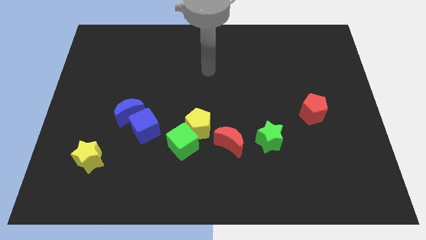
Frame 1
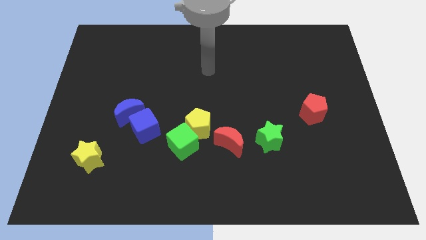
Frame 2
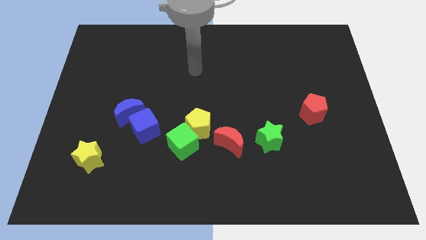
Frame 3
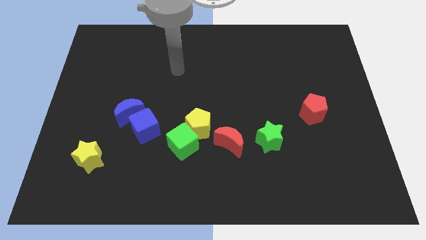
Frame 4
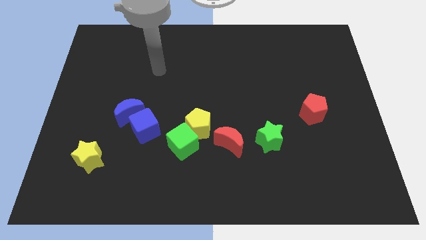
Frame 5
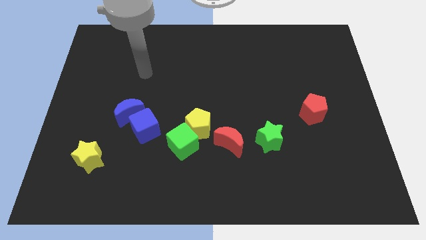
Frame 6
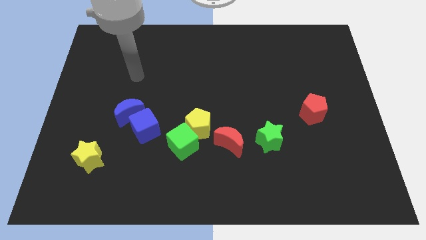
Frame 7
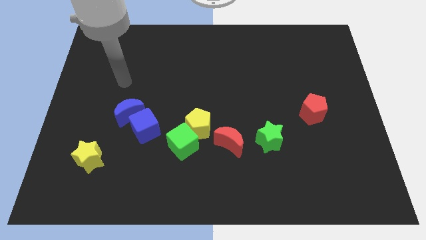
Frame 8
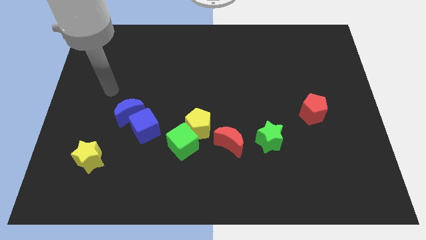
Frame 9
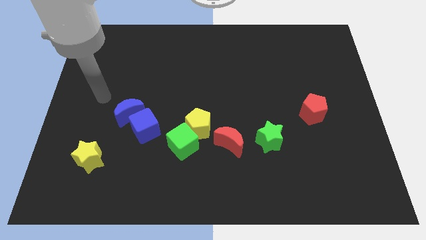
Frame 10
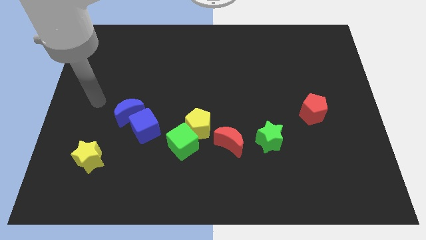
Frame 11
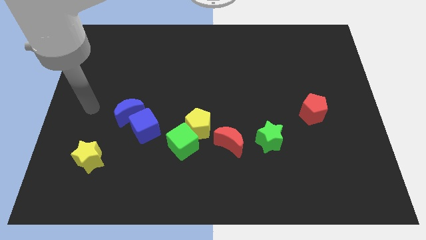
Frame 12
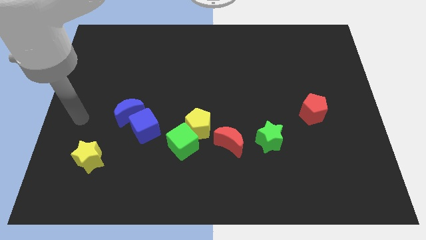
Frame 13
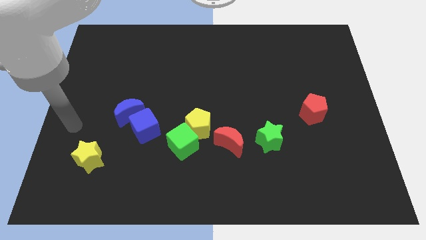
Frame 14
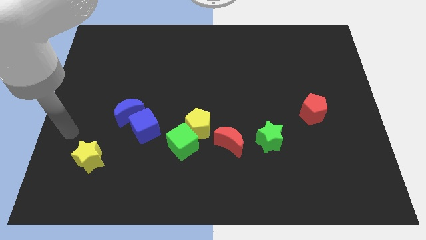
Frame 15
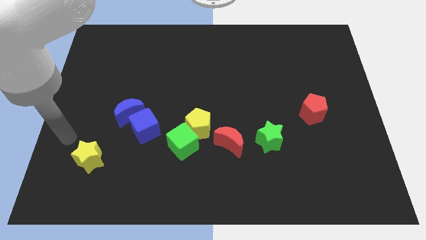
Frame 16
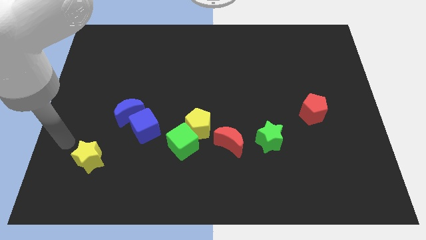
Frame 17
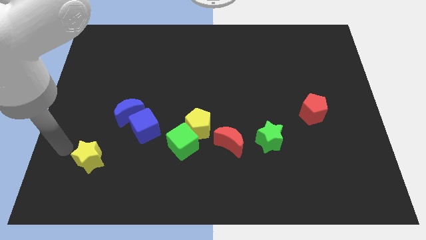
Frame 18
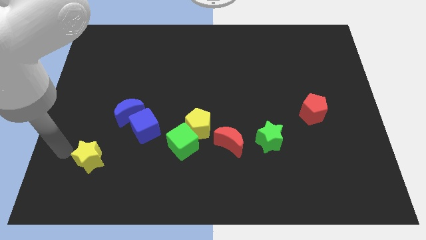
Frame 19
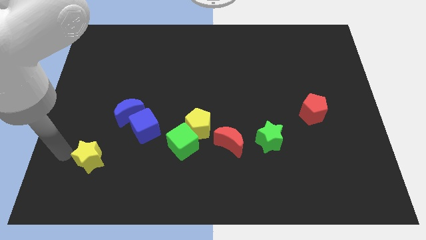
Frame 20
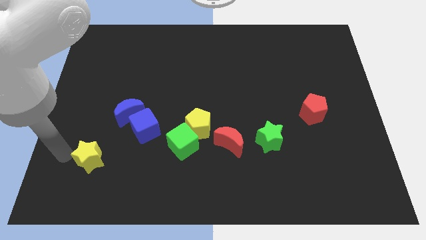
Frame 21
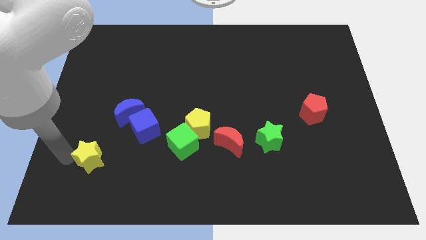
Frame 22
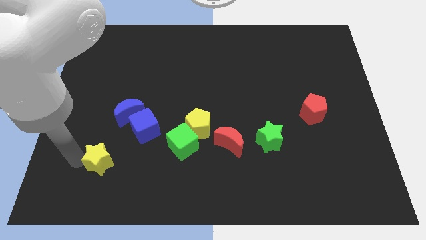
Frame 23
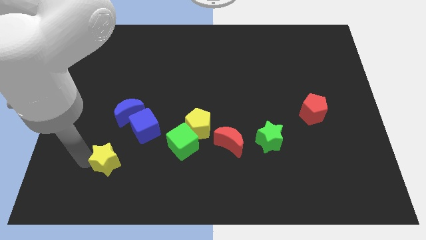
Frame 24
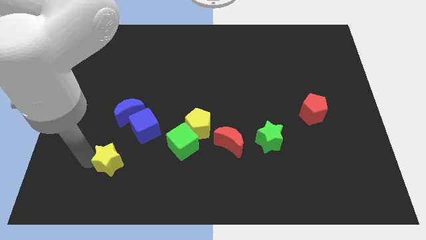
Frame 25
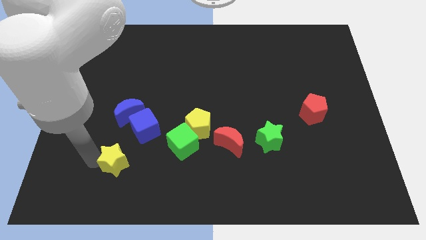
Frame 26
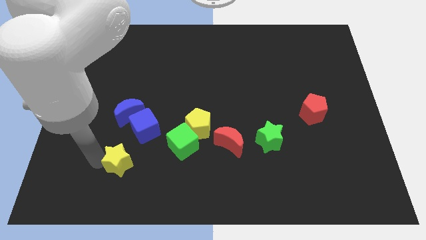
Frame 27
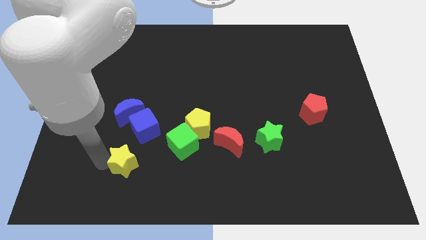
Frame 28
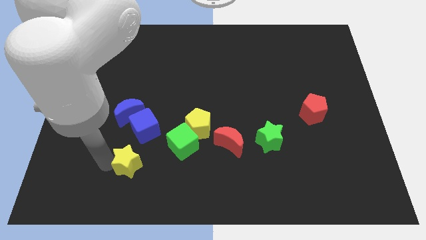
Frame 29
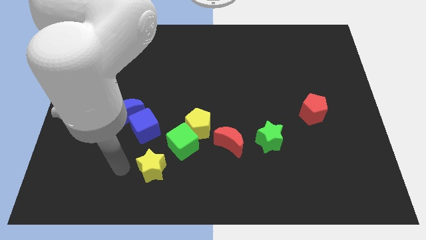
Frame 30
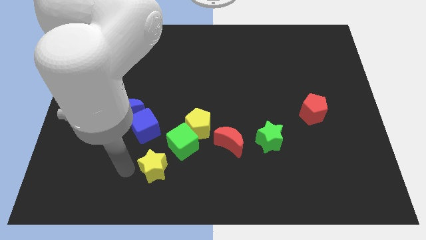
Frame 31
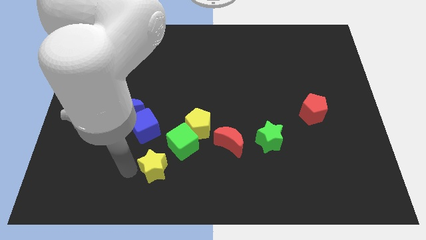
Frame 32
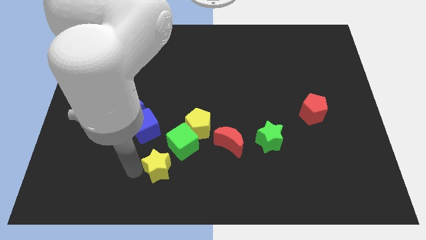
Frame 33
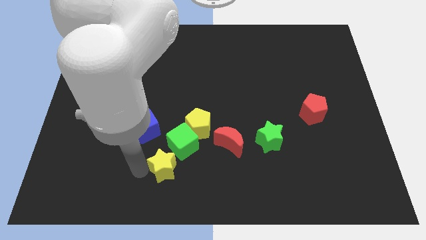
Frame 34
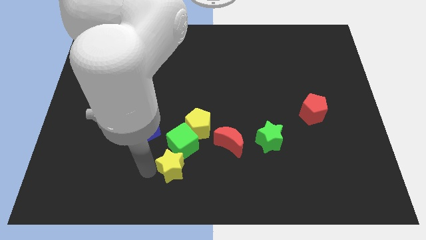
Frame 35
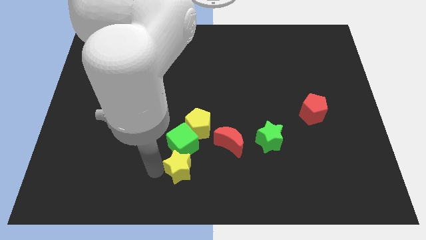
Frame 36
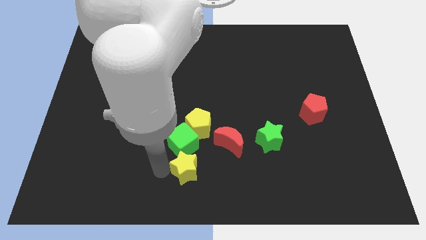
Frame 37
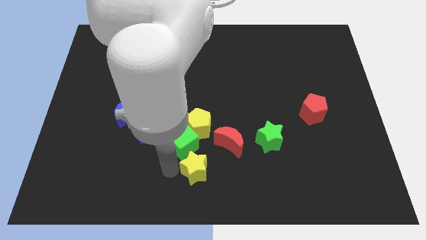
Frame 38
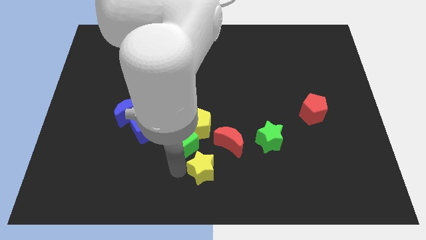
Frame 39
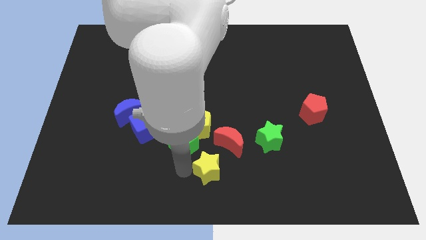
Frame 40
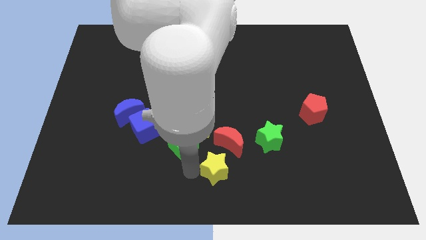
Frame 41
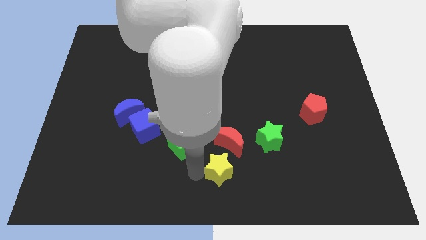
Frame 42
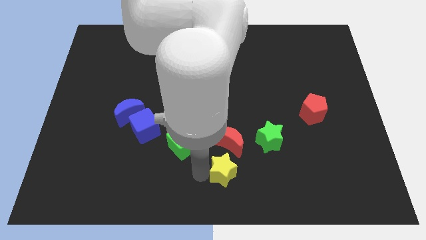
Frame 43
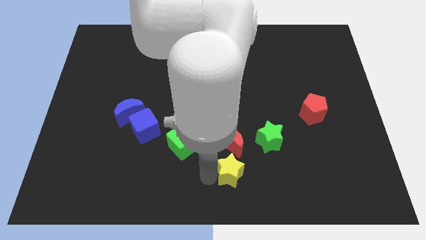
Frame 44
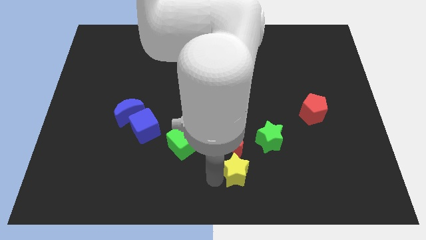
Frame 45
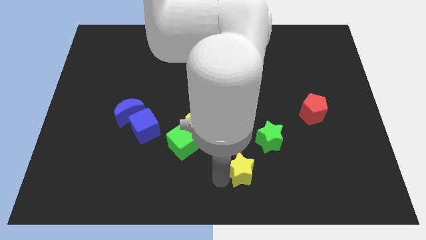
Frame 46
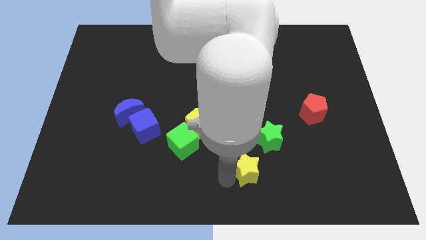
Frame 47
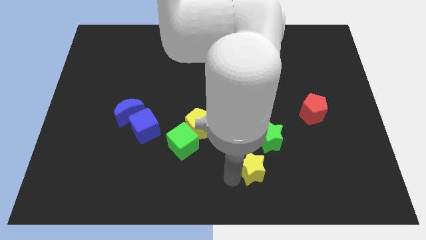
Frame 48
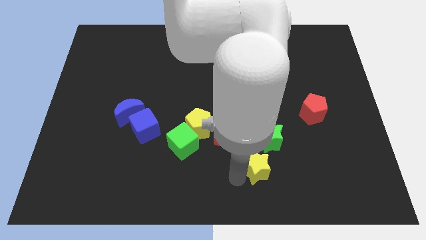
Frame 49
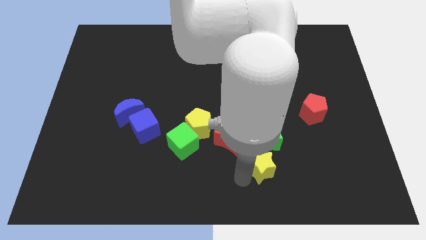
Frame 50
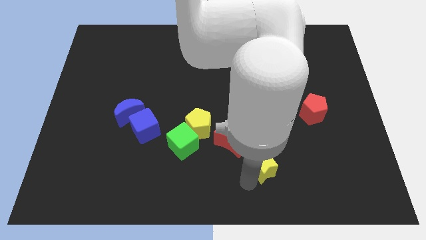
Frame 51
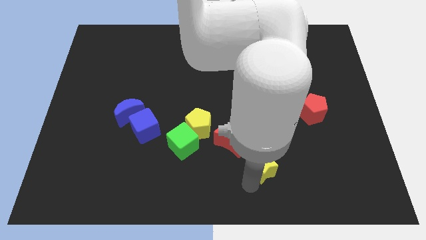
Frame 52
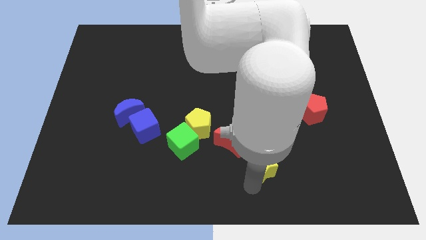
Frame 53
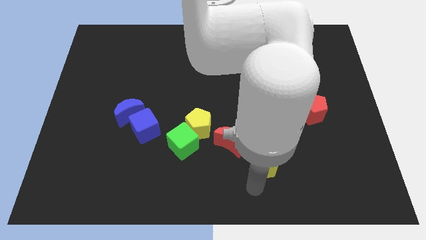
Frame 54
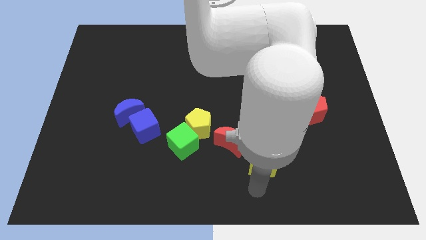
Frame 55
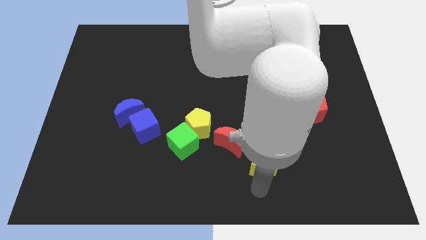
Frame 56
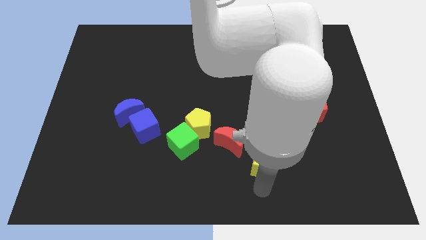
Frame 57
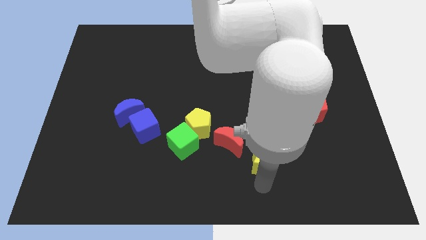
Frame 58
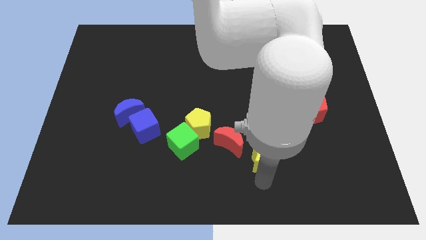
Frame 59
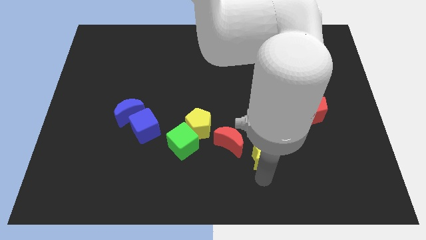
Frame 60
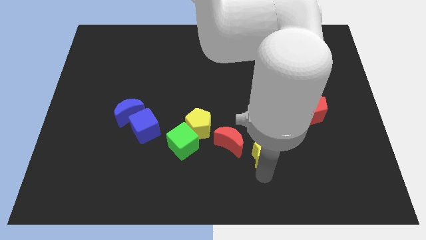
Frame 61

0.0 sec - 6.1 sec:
move the yellow star towards the green star

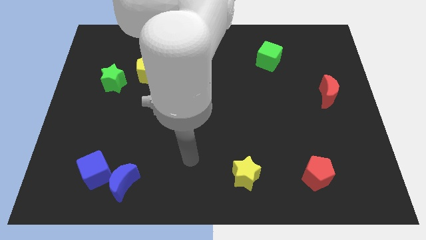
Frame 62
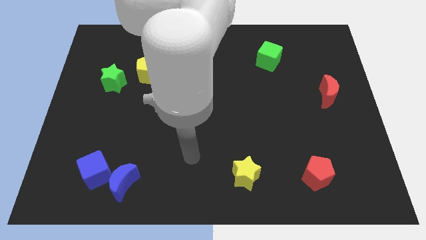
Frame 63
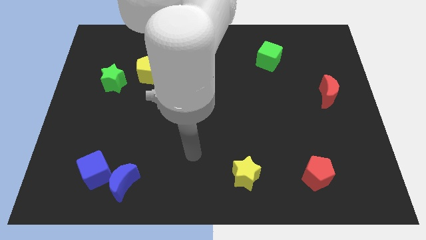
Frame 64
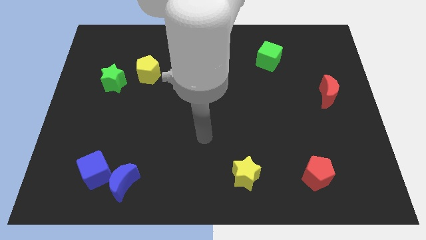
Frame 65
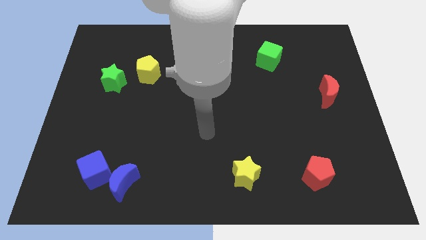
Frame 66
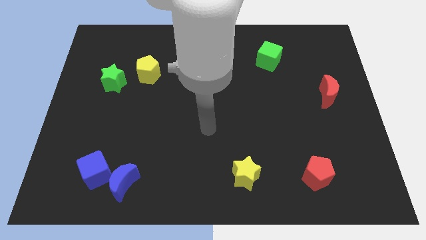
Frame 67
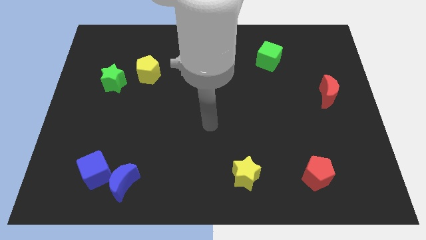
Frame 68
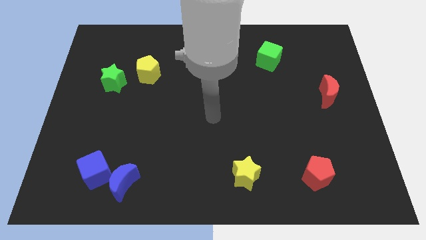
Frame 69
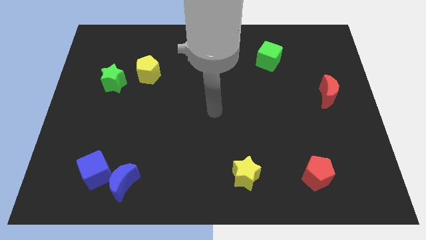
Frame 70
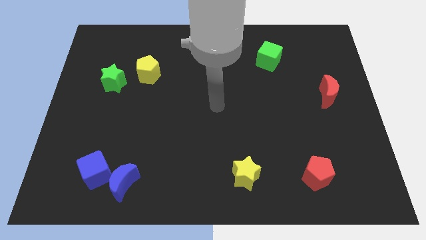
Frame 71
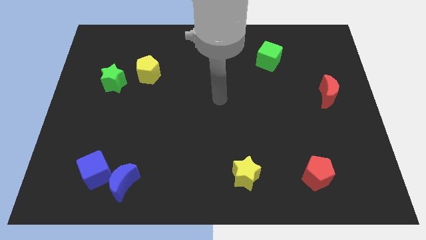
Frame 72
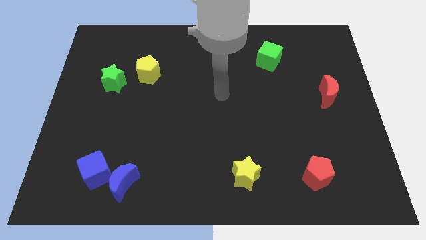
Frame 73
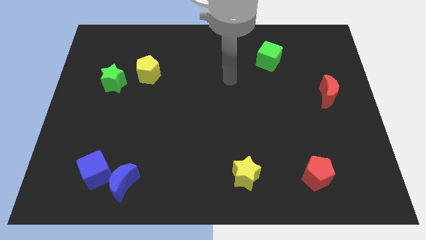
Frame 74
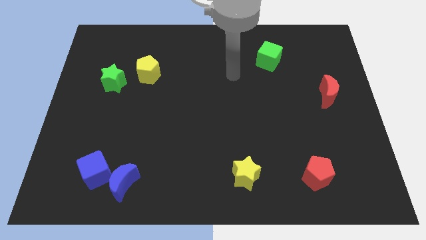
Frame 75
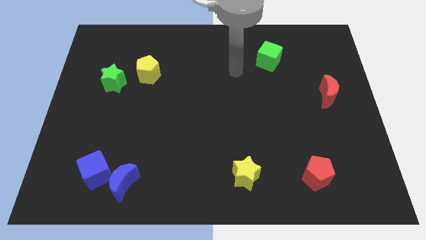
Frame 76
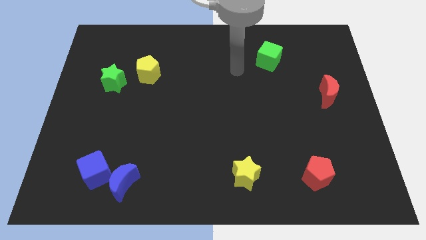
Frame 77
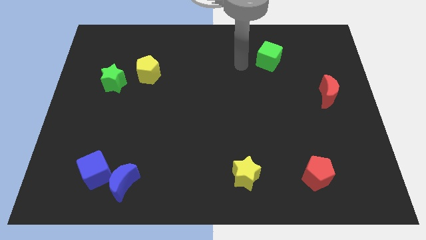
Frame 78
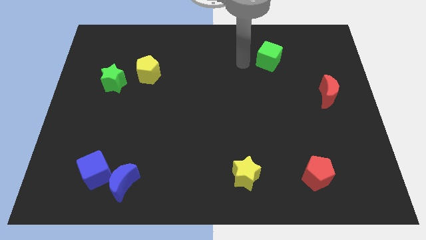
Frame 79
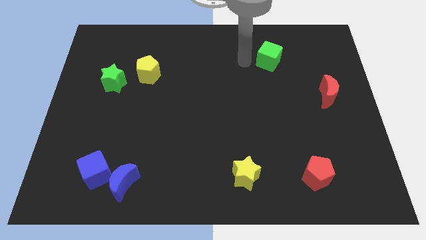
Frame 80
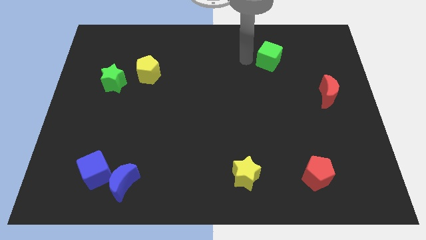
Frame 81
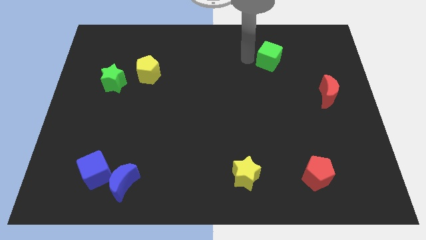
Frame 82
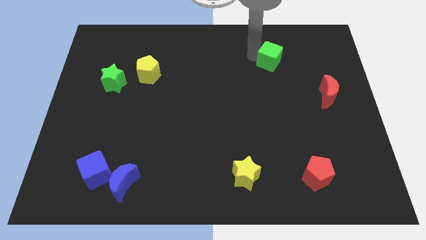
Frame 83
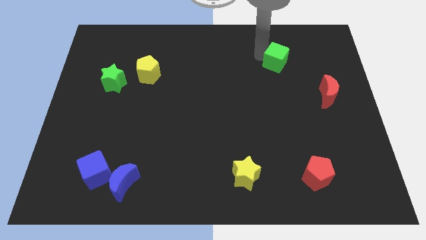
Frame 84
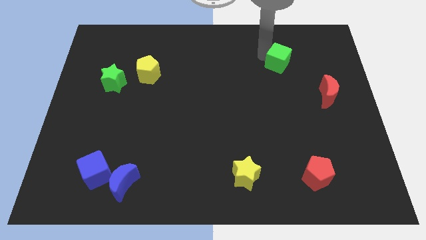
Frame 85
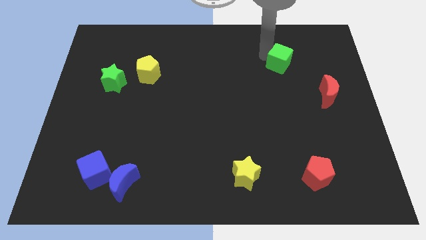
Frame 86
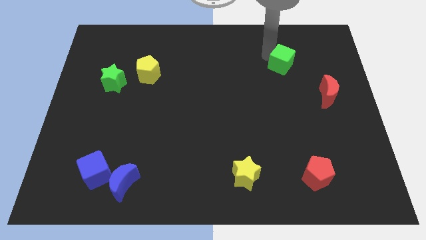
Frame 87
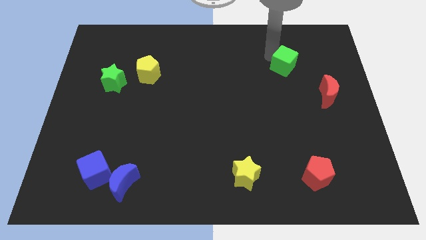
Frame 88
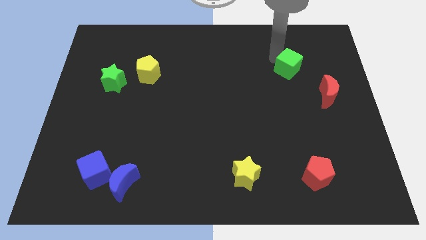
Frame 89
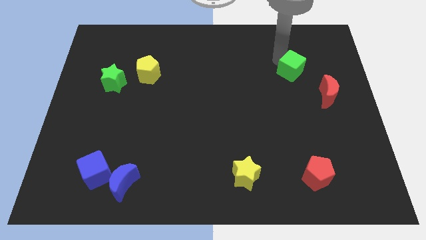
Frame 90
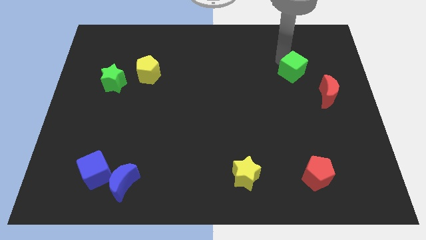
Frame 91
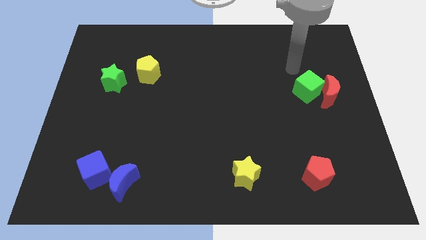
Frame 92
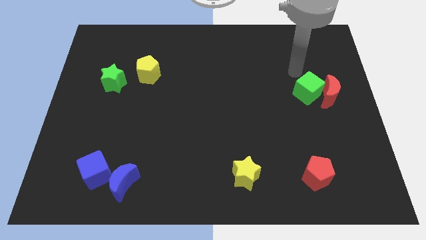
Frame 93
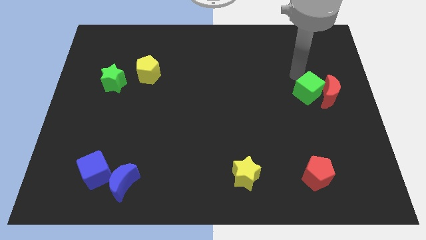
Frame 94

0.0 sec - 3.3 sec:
put the green cube to the red moon
